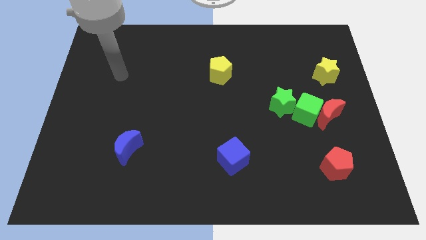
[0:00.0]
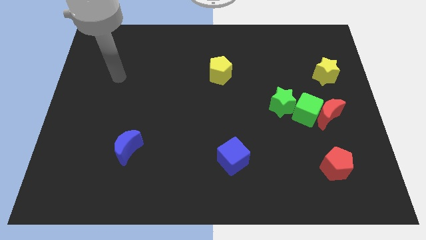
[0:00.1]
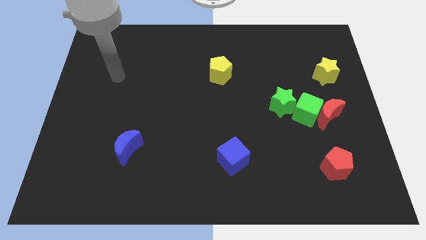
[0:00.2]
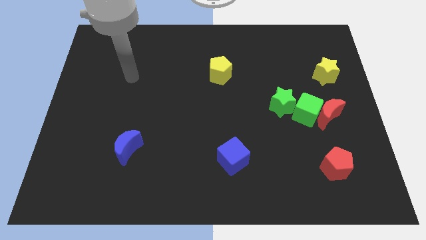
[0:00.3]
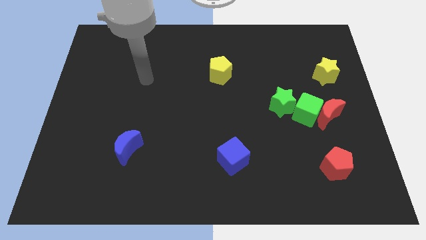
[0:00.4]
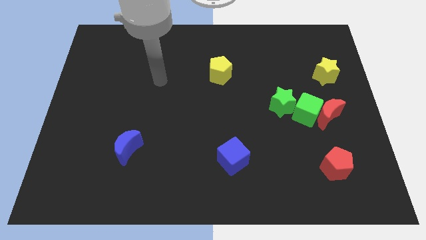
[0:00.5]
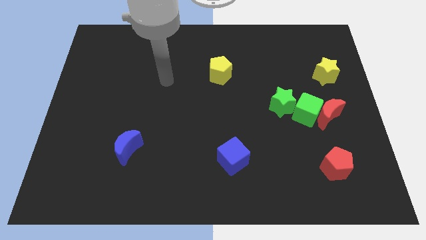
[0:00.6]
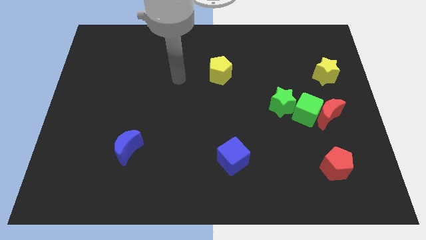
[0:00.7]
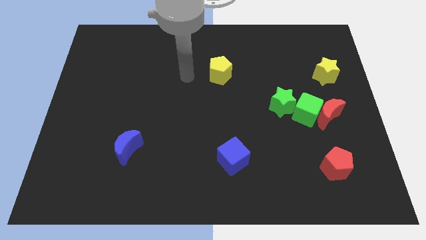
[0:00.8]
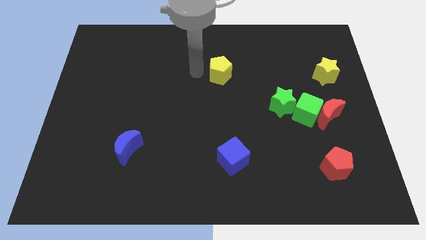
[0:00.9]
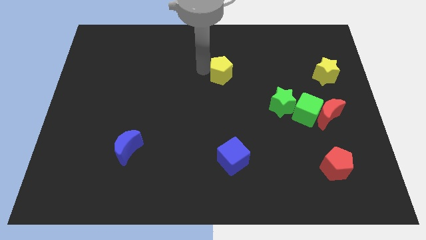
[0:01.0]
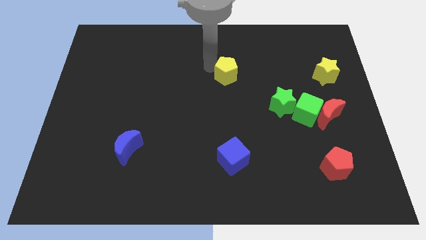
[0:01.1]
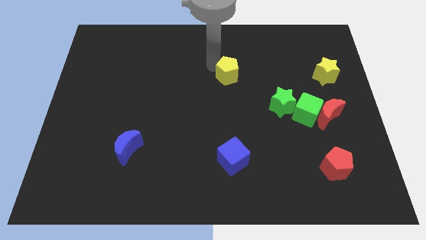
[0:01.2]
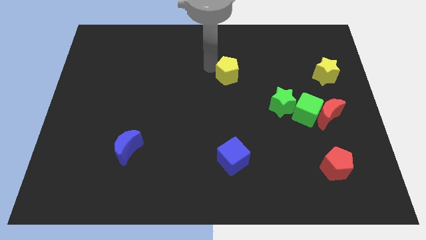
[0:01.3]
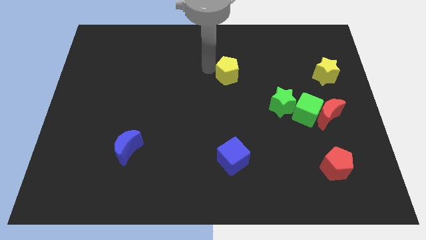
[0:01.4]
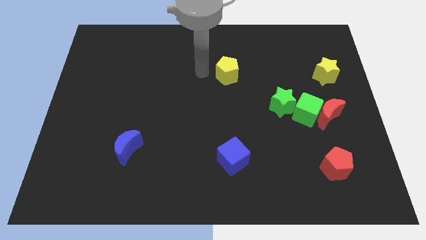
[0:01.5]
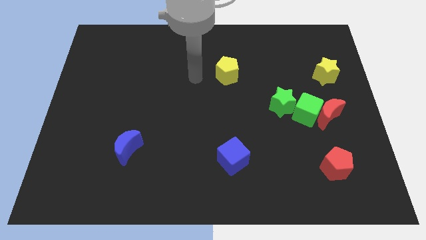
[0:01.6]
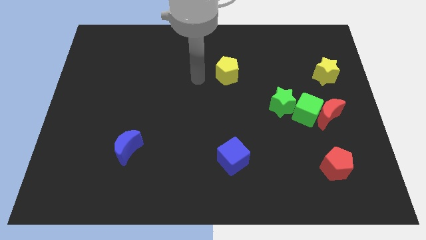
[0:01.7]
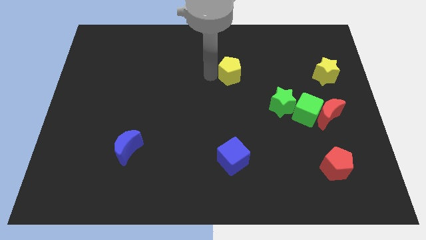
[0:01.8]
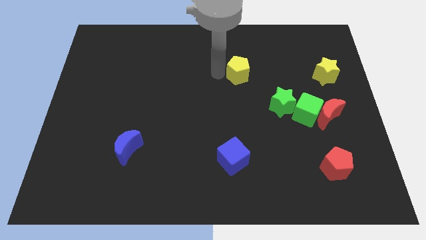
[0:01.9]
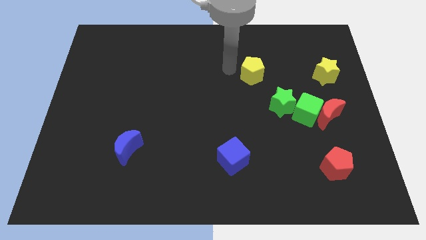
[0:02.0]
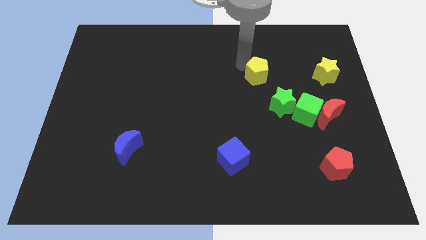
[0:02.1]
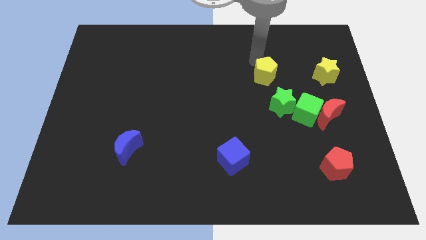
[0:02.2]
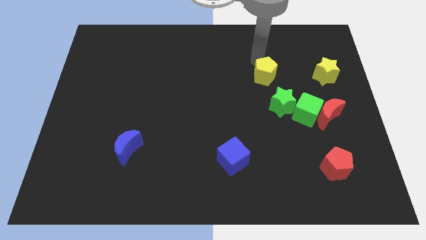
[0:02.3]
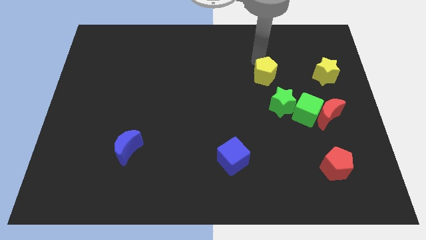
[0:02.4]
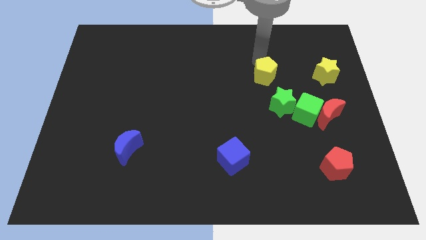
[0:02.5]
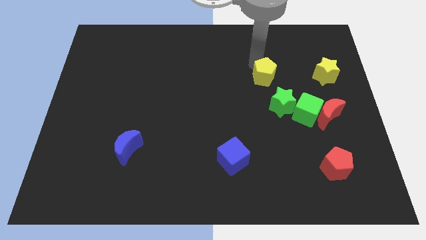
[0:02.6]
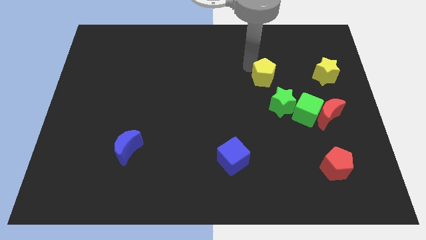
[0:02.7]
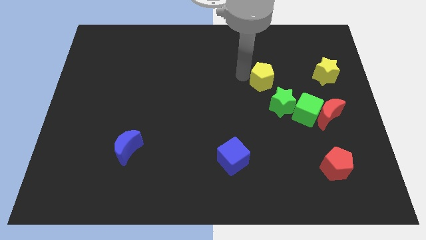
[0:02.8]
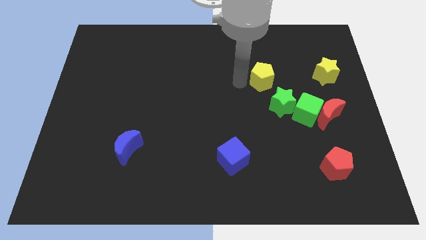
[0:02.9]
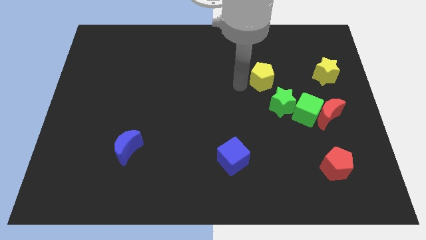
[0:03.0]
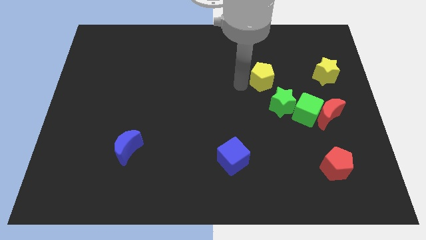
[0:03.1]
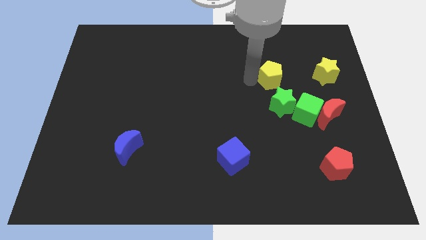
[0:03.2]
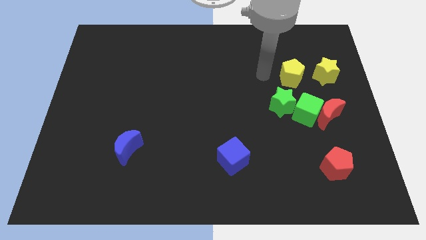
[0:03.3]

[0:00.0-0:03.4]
place yellow pentagon above green star

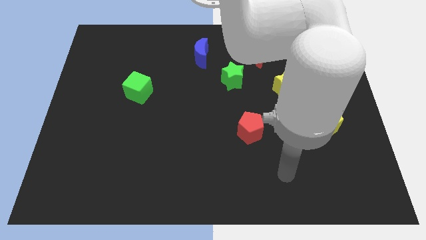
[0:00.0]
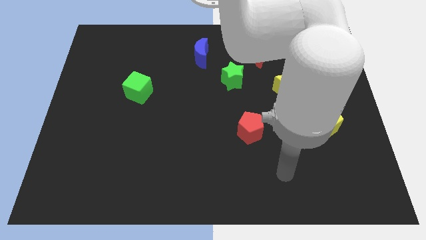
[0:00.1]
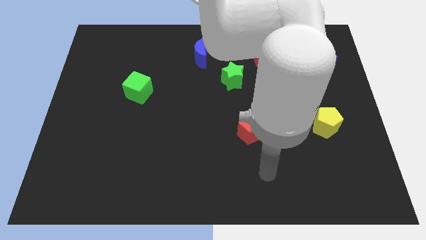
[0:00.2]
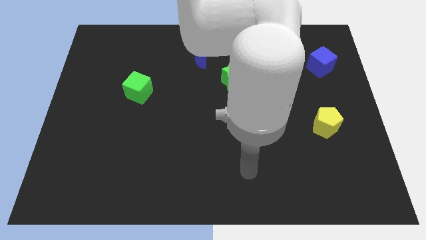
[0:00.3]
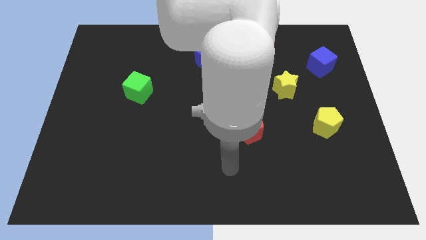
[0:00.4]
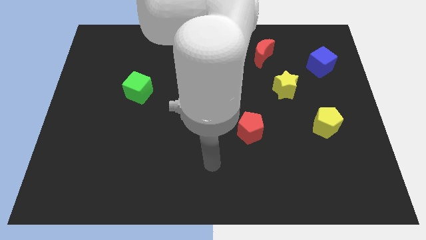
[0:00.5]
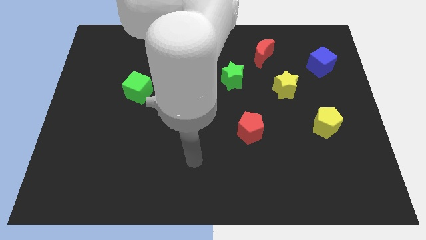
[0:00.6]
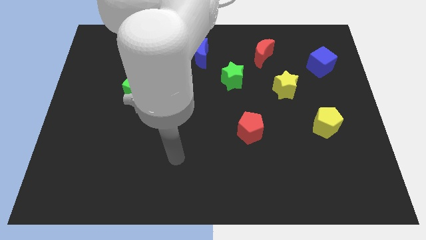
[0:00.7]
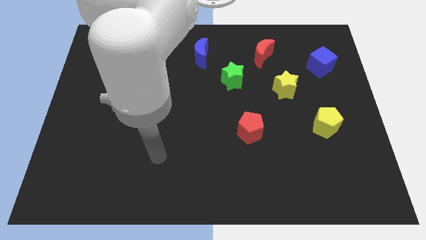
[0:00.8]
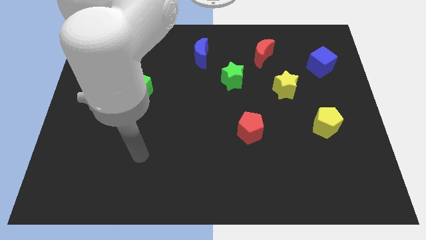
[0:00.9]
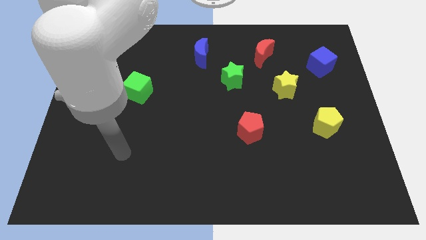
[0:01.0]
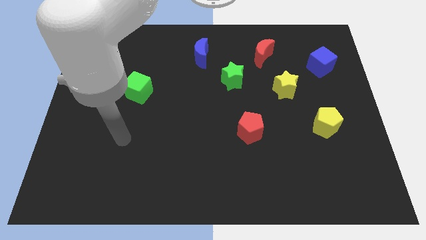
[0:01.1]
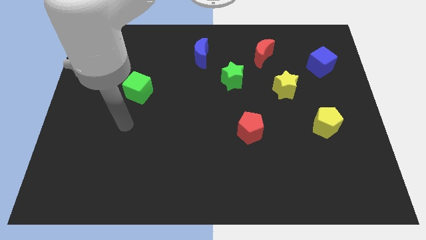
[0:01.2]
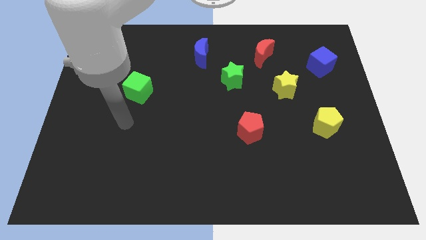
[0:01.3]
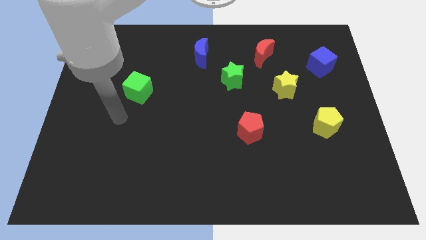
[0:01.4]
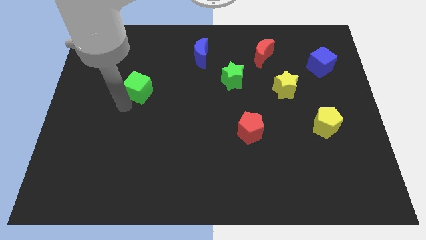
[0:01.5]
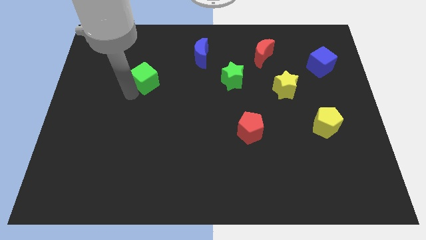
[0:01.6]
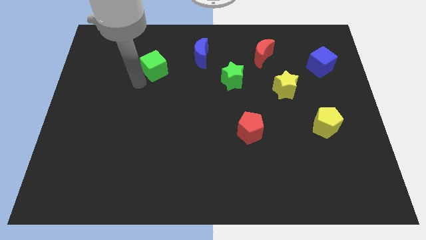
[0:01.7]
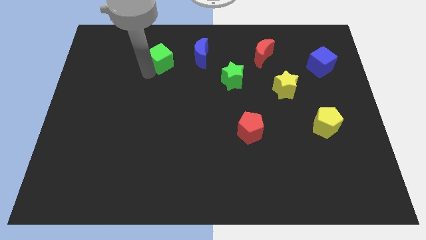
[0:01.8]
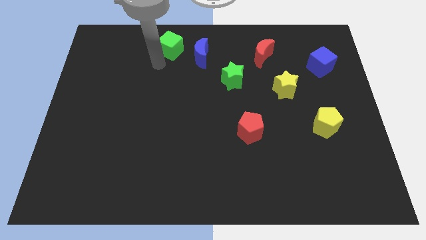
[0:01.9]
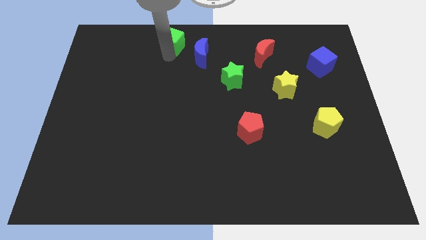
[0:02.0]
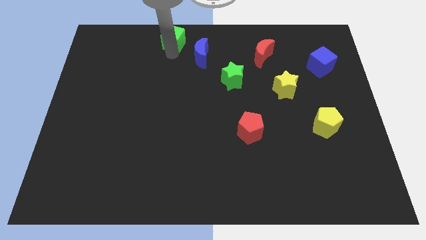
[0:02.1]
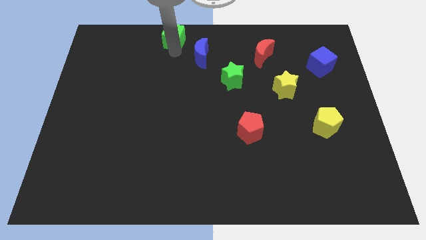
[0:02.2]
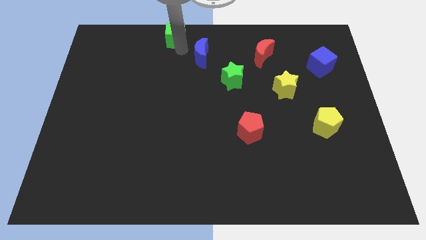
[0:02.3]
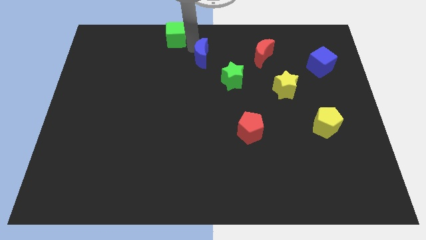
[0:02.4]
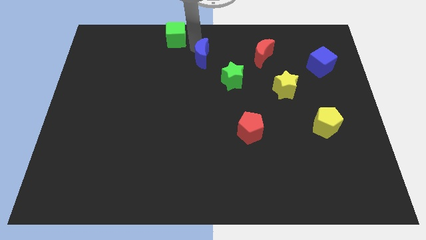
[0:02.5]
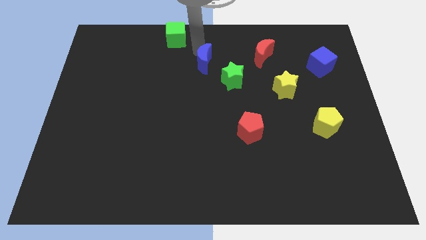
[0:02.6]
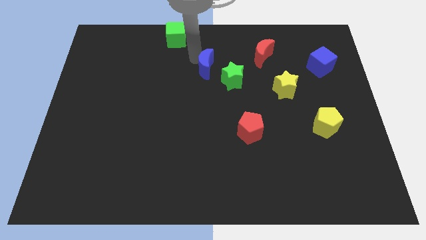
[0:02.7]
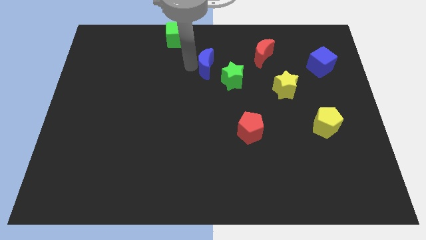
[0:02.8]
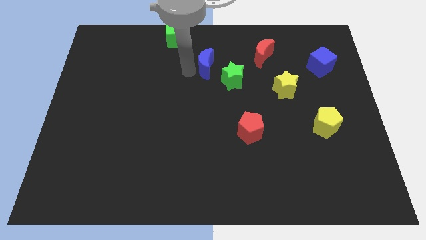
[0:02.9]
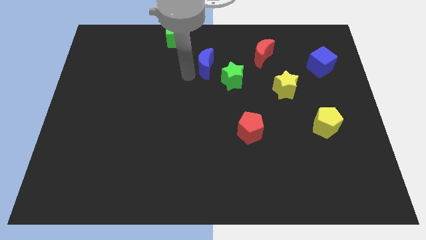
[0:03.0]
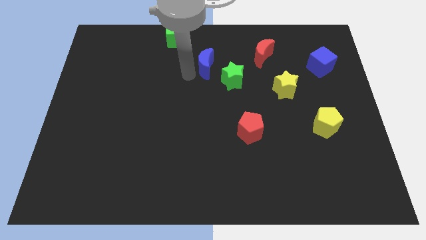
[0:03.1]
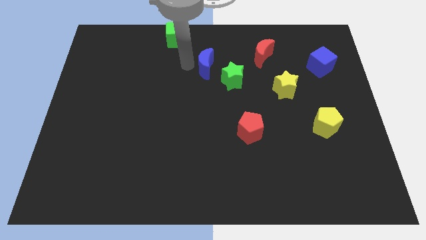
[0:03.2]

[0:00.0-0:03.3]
push the green cube diagonally to blue moon

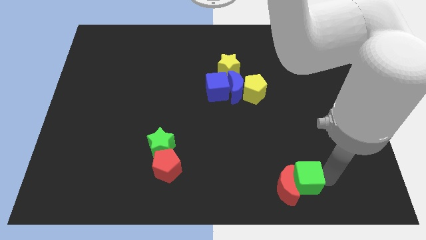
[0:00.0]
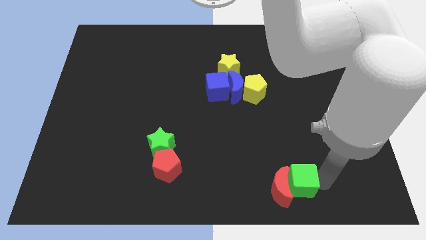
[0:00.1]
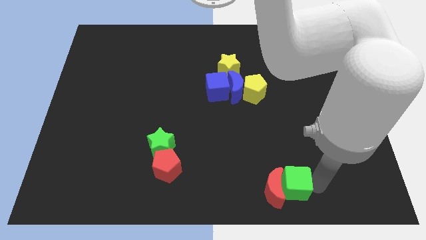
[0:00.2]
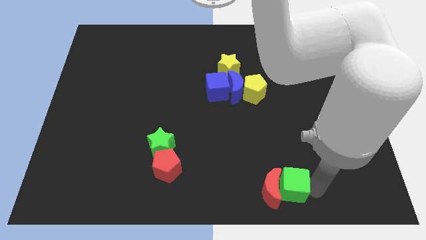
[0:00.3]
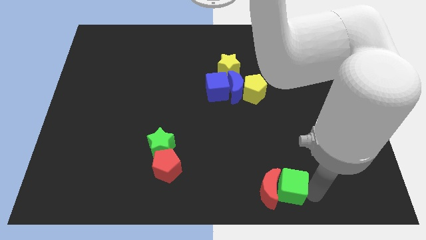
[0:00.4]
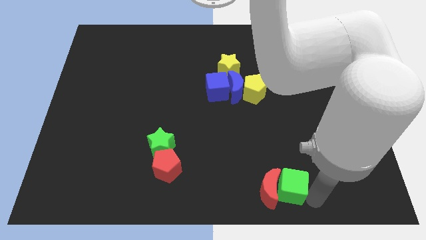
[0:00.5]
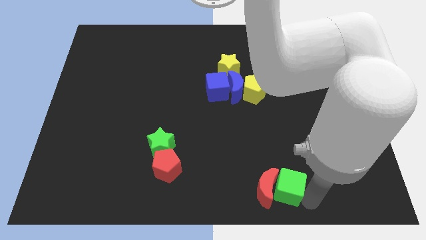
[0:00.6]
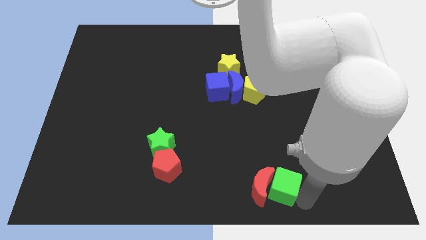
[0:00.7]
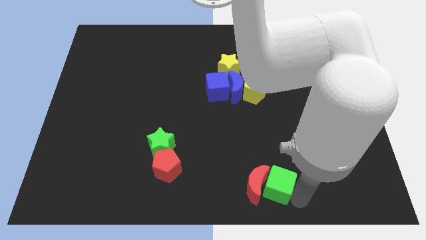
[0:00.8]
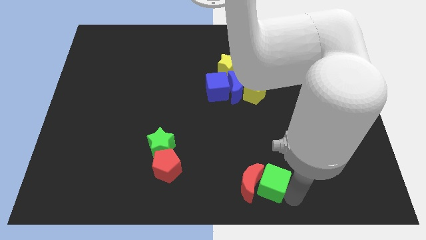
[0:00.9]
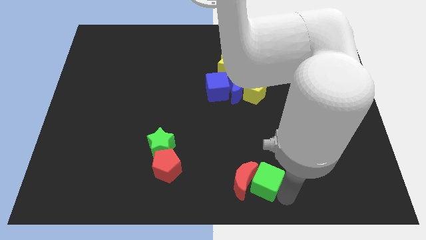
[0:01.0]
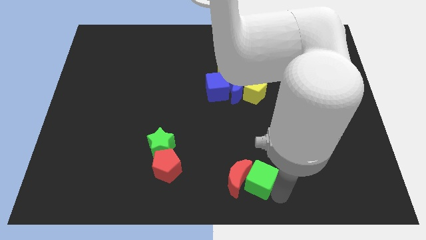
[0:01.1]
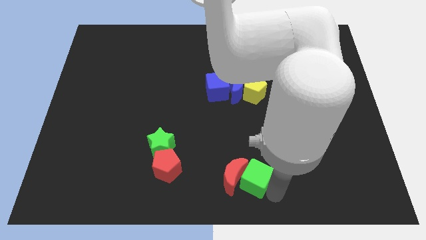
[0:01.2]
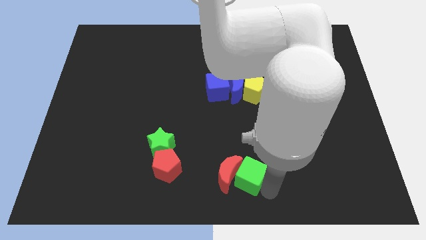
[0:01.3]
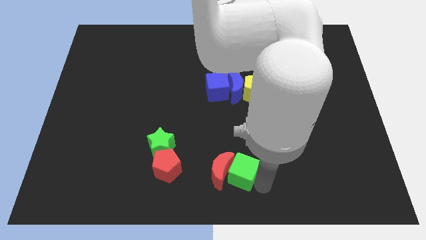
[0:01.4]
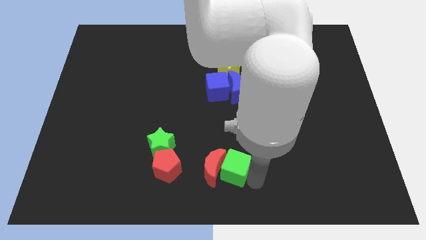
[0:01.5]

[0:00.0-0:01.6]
move the red crescent with the green cube to the bottom center of the board

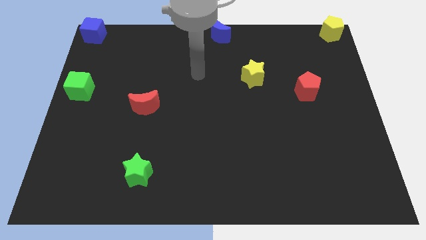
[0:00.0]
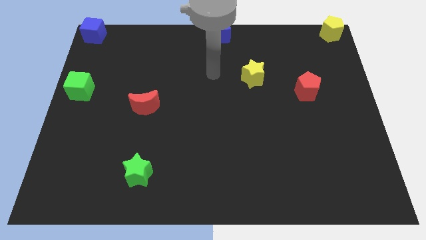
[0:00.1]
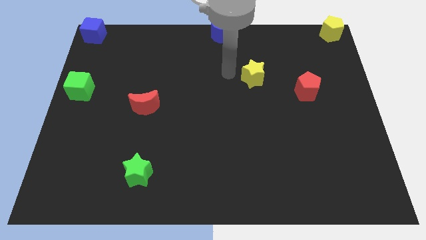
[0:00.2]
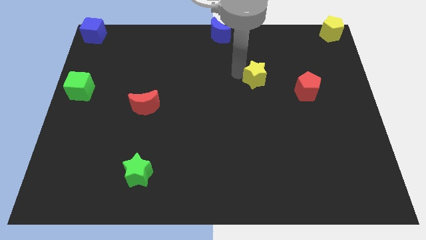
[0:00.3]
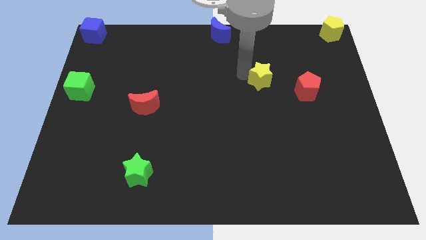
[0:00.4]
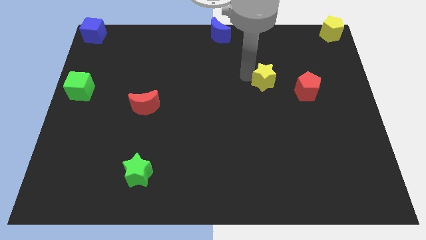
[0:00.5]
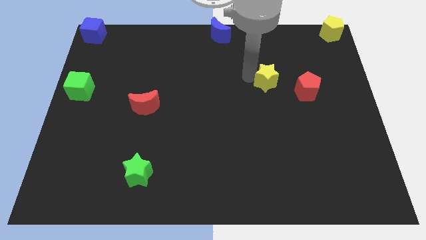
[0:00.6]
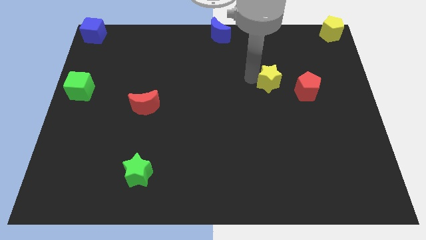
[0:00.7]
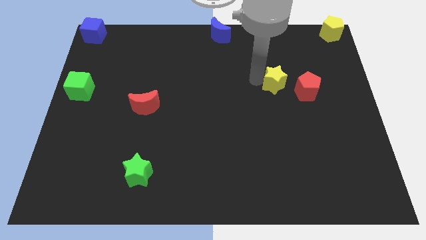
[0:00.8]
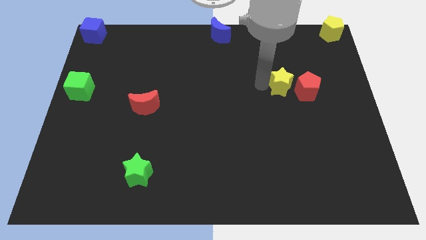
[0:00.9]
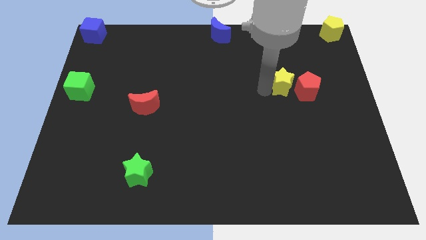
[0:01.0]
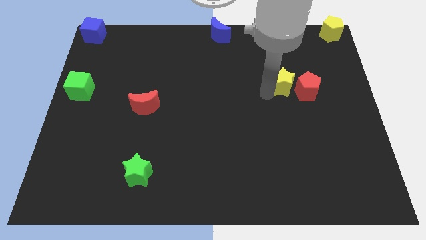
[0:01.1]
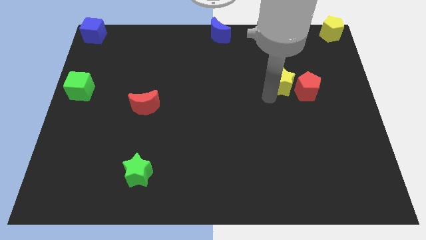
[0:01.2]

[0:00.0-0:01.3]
slide the yellow star slightly towards the red pentagon
